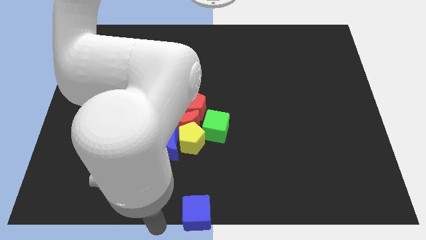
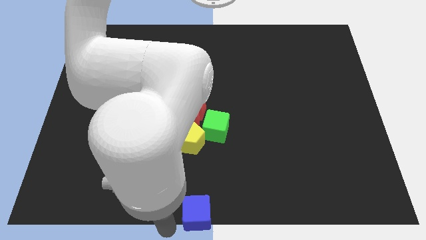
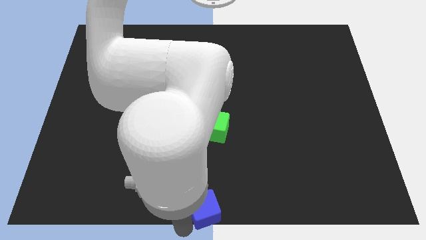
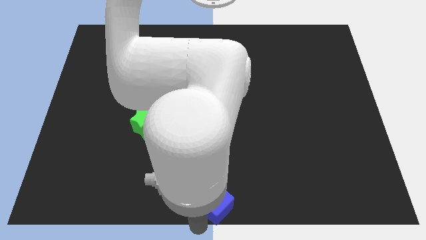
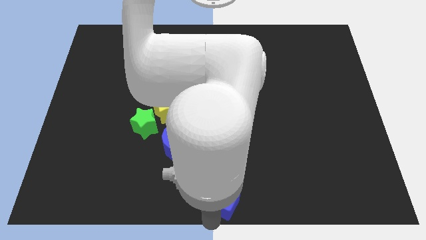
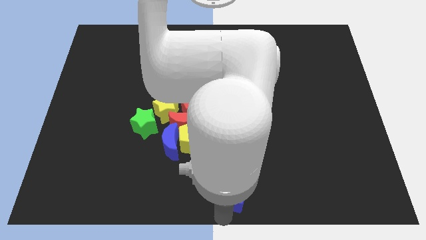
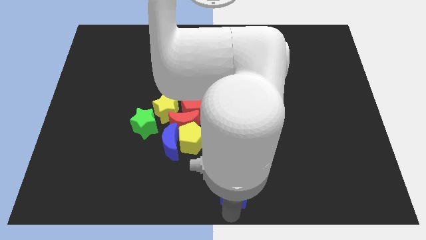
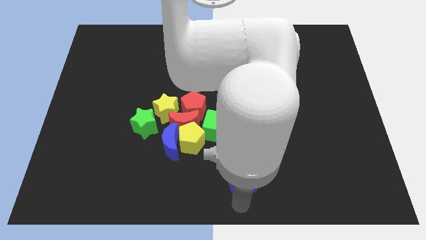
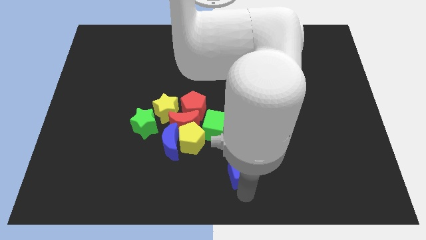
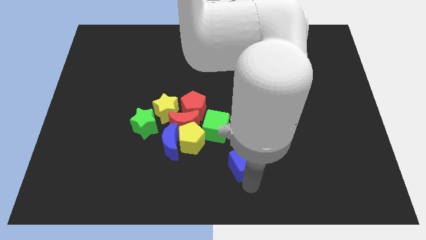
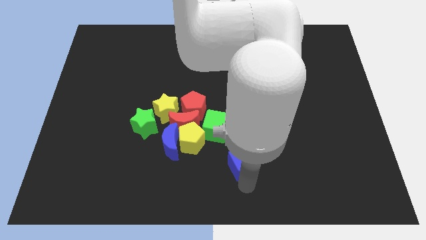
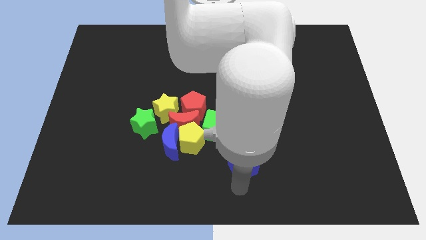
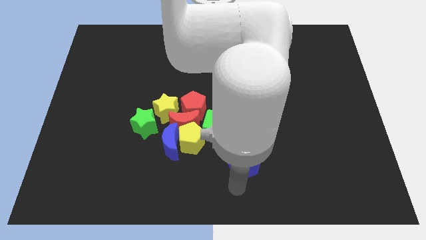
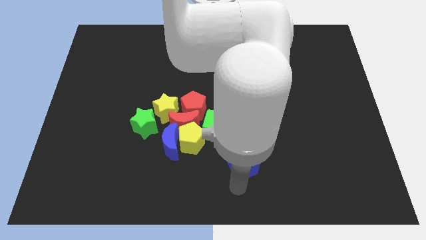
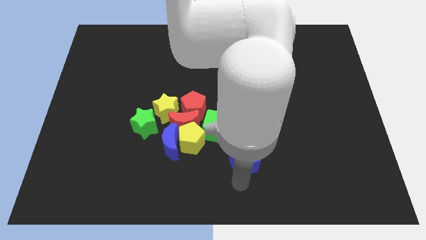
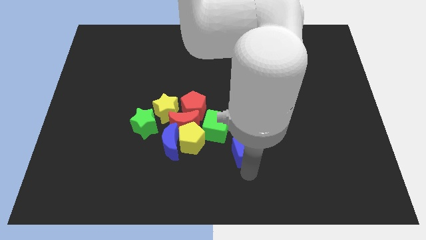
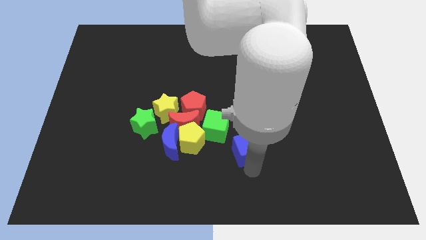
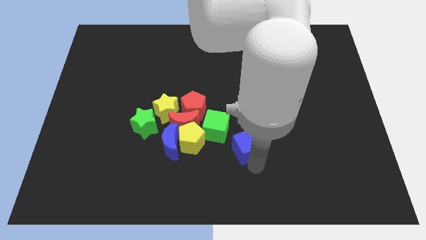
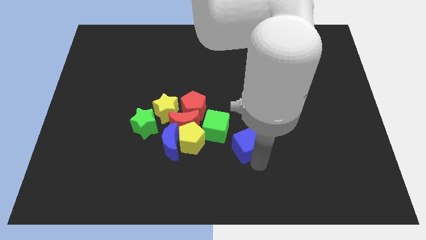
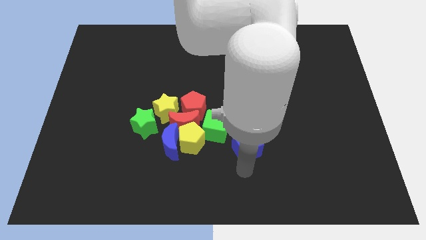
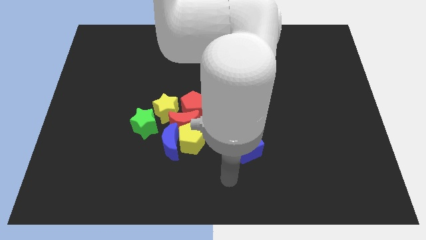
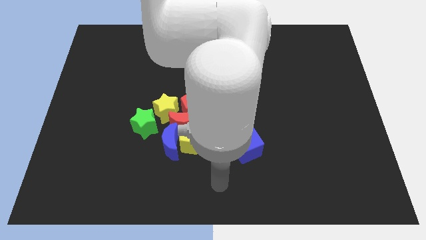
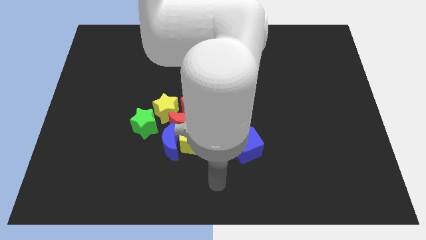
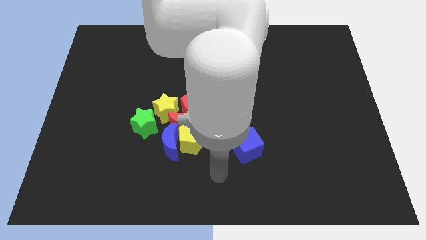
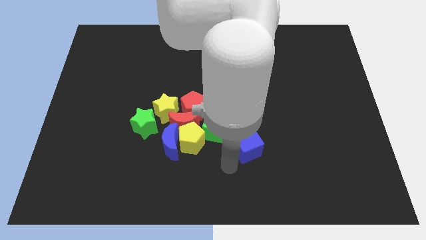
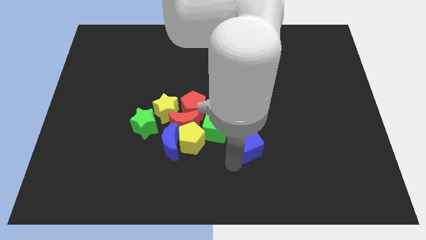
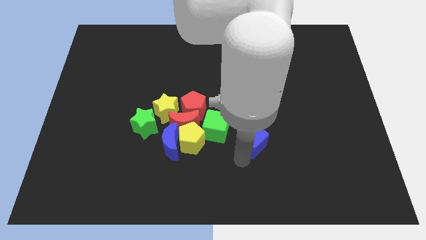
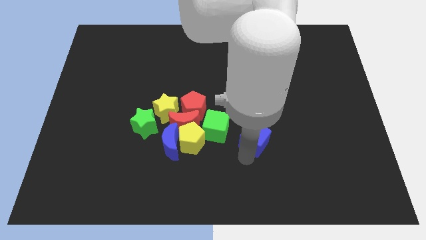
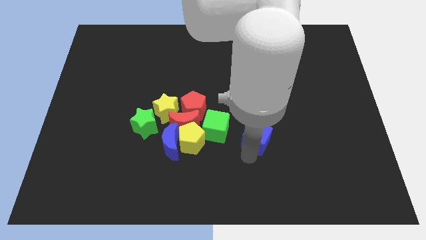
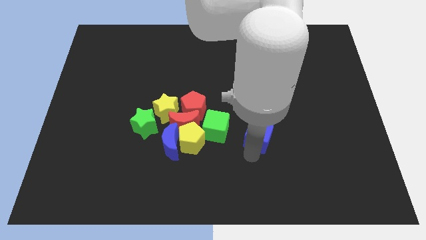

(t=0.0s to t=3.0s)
move the blue cube to the right of the green cube

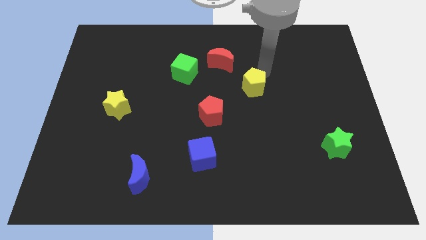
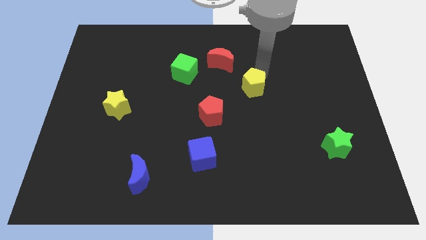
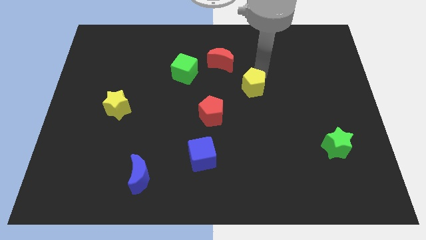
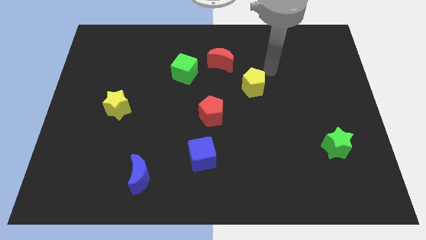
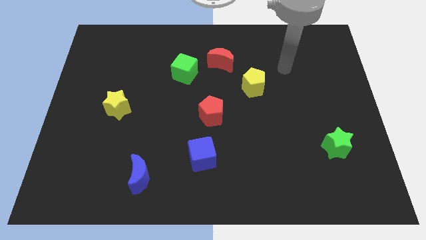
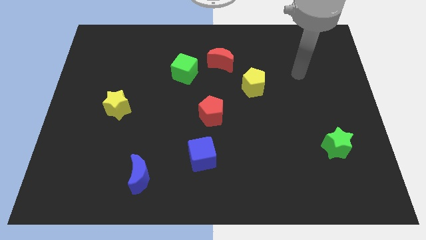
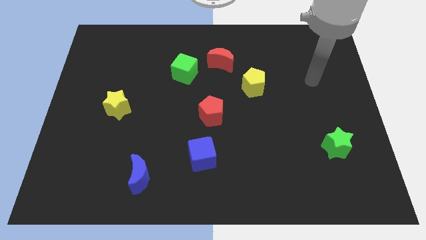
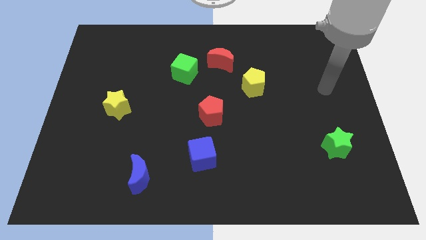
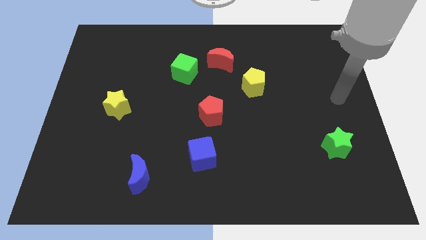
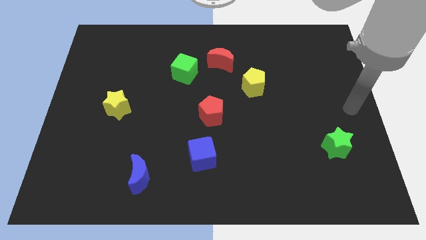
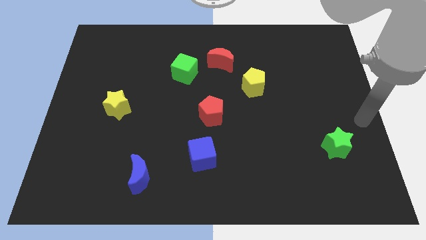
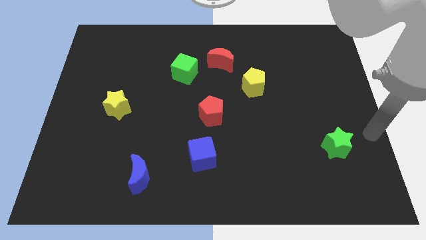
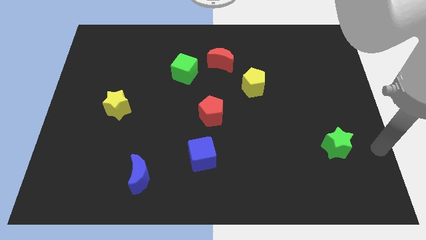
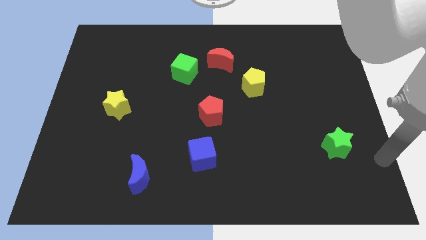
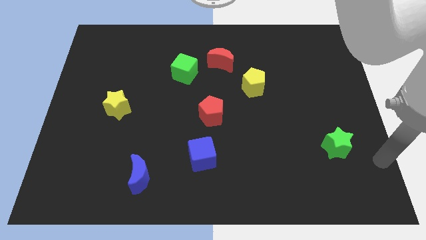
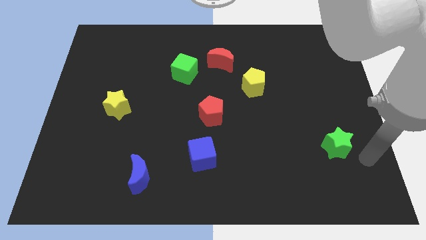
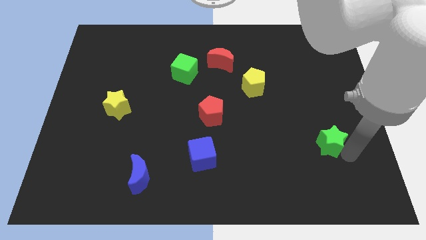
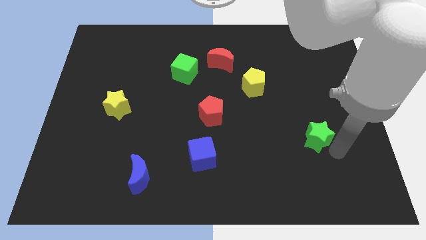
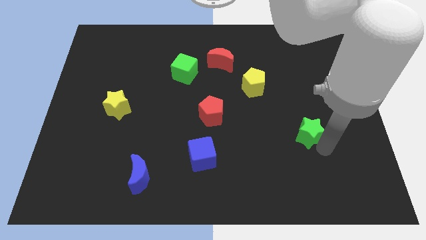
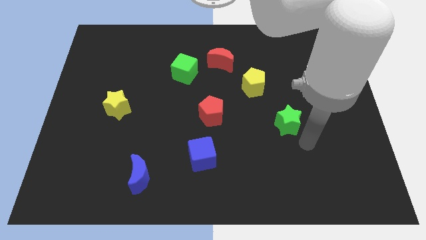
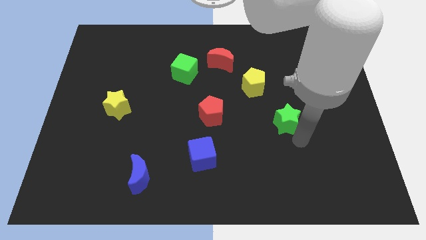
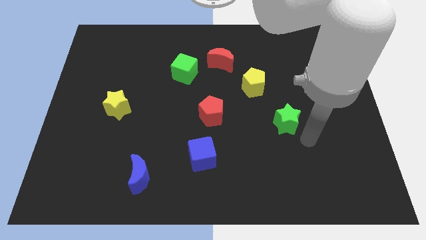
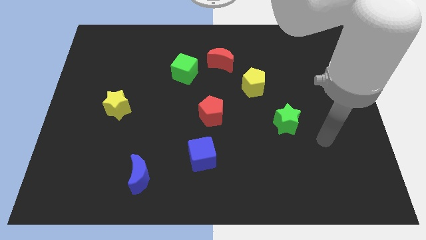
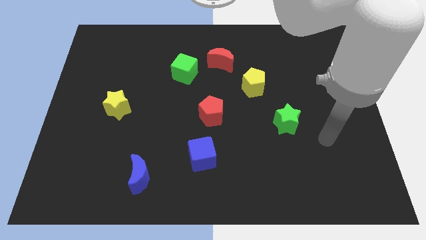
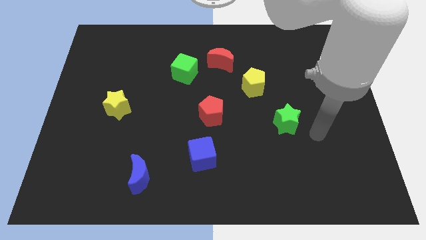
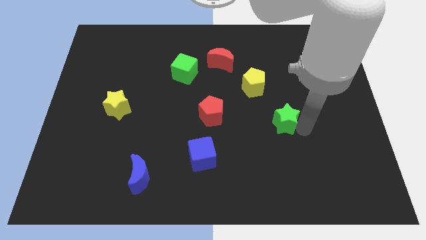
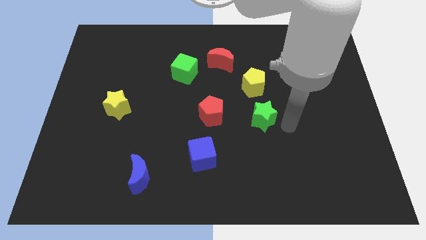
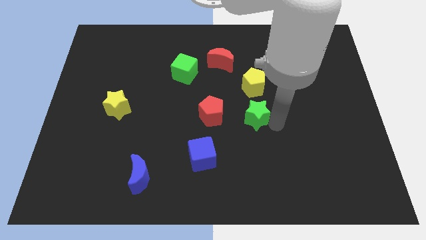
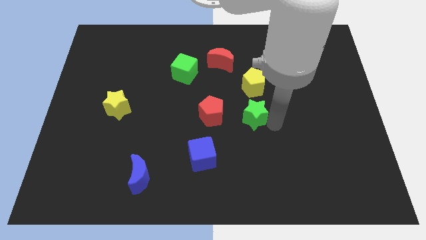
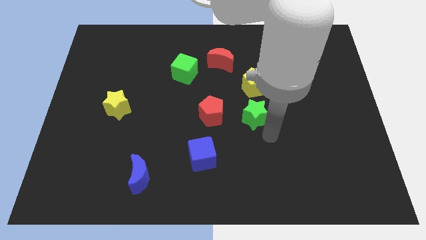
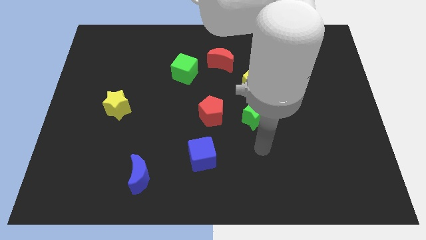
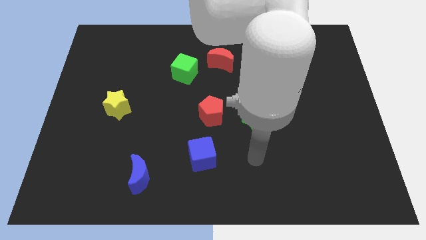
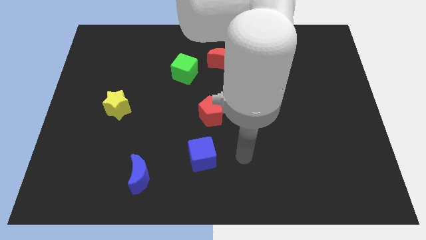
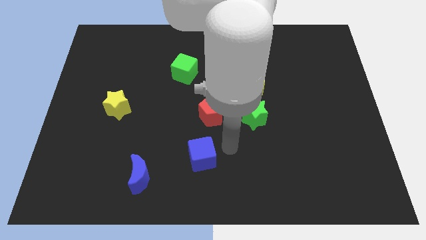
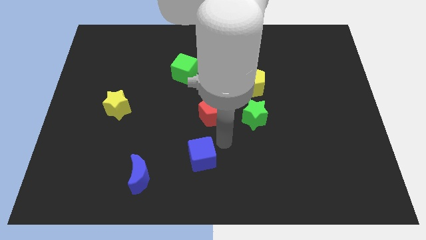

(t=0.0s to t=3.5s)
push the green star to the right of the red pentagon

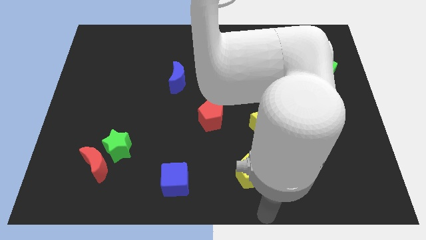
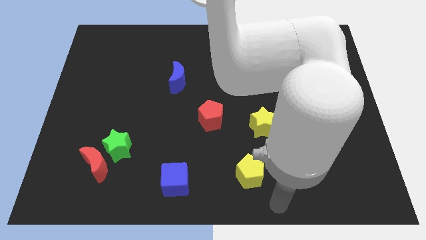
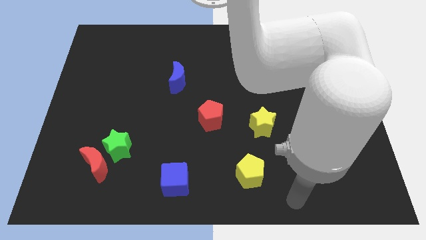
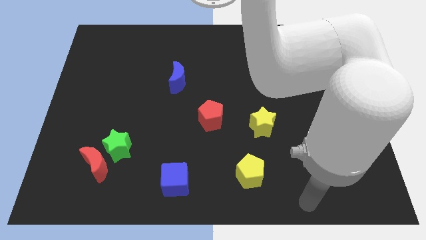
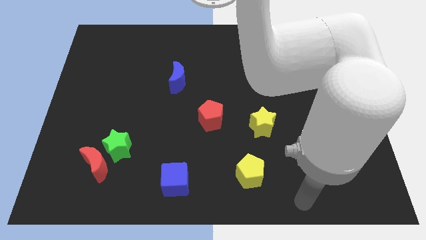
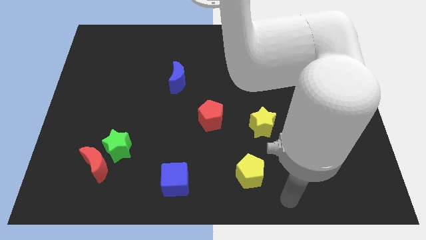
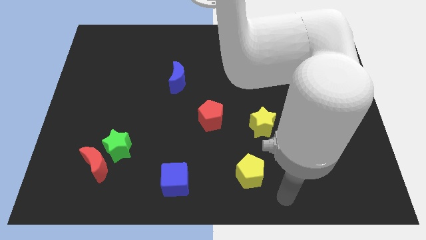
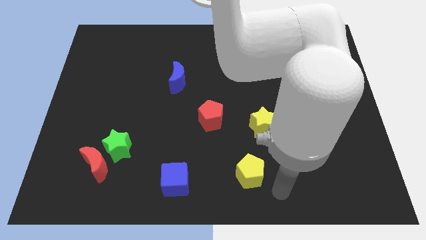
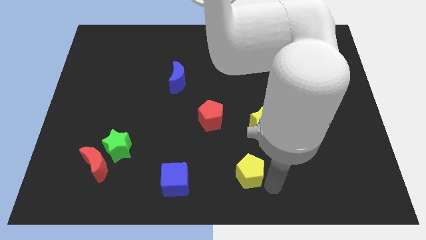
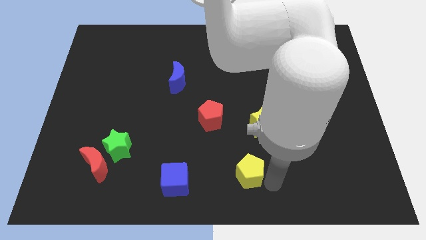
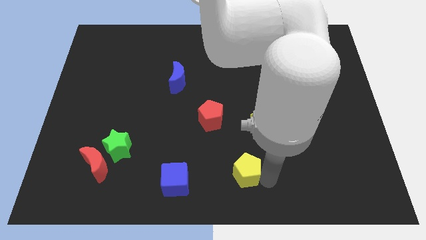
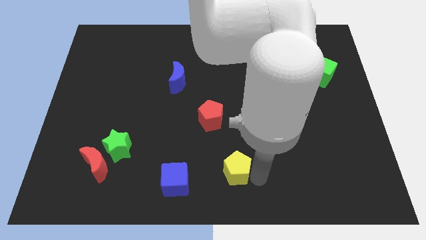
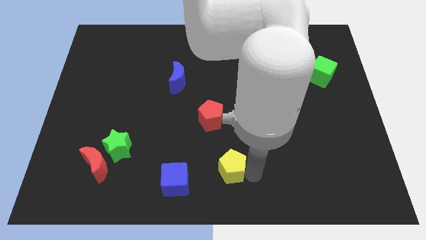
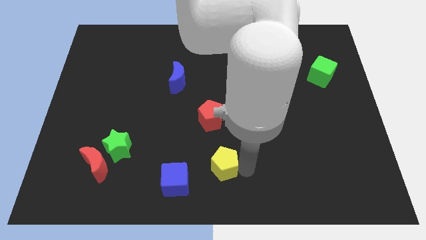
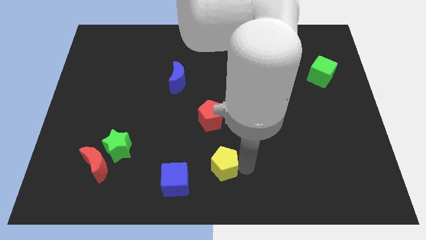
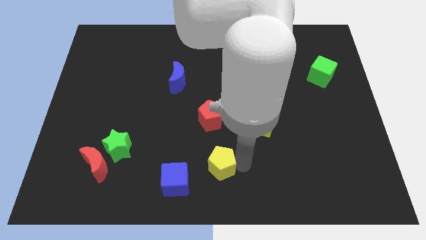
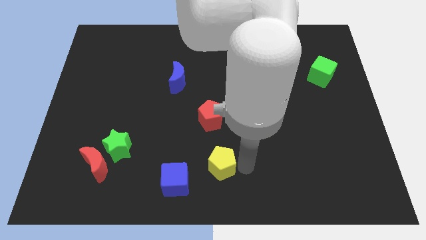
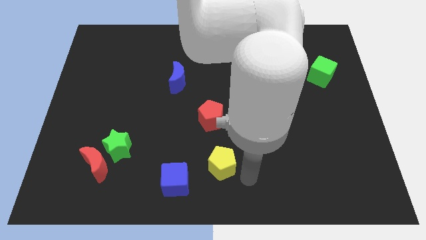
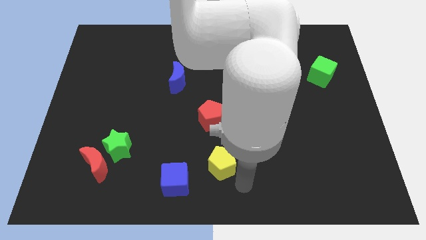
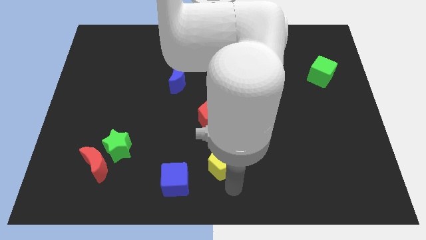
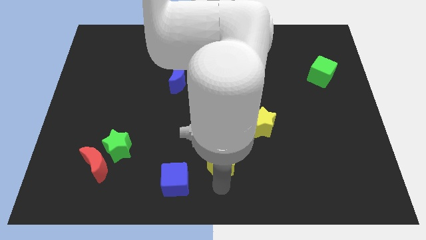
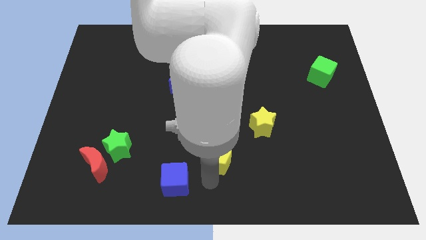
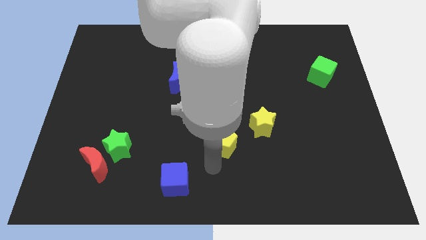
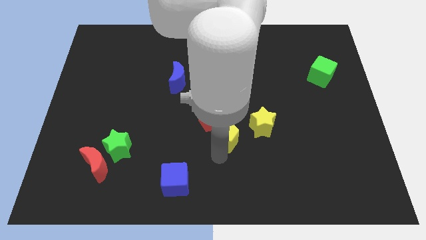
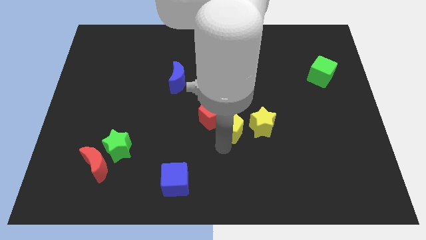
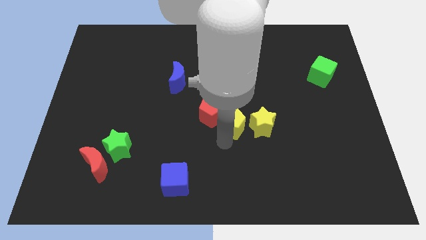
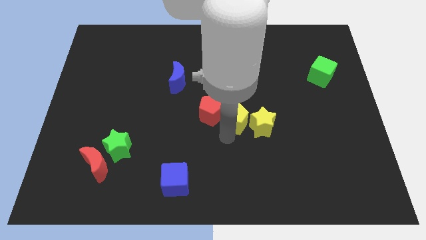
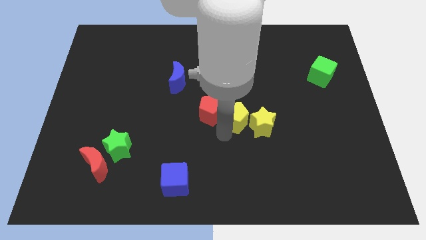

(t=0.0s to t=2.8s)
place the yellow pentagon in between the red pentagon and yellow star
